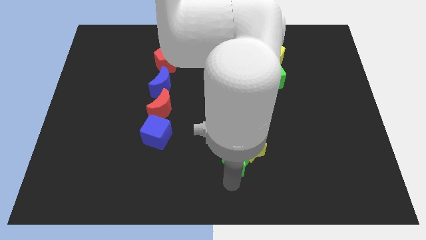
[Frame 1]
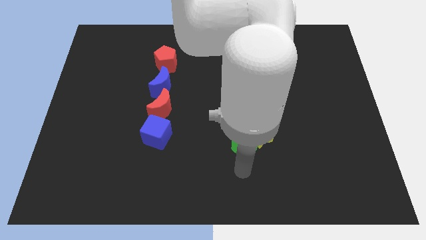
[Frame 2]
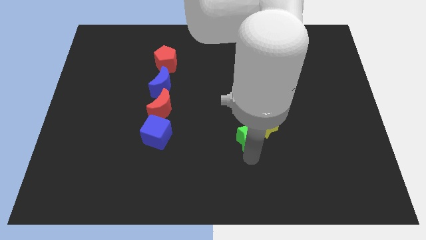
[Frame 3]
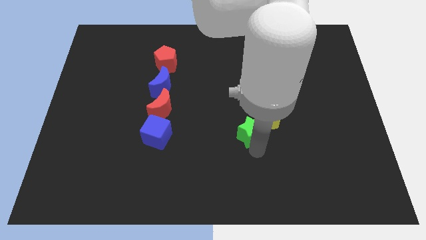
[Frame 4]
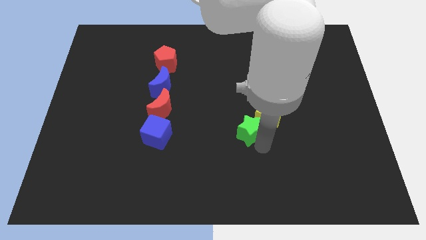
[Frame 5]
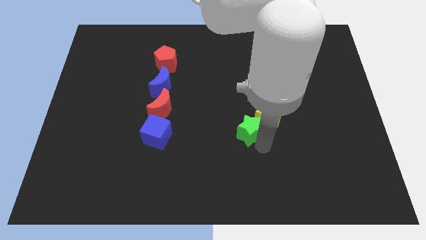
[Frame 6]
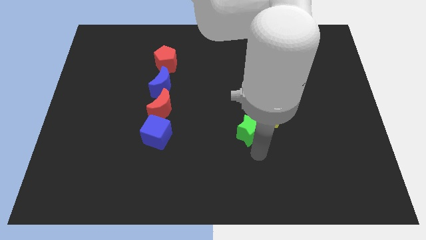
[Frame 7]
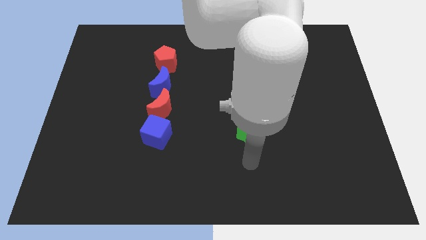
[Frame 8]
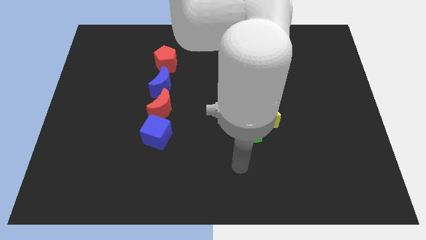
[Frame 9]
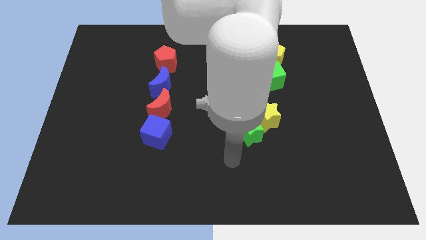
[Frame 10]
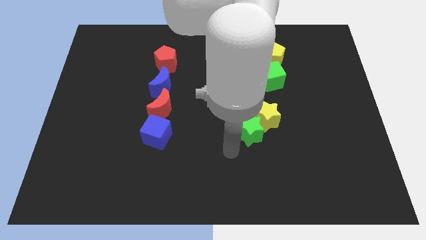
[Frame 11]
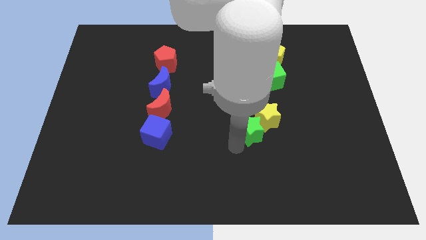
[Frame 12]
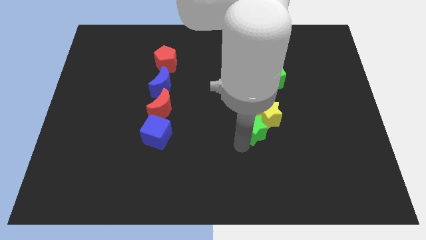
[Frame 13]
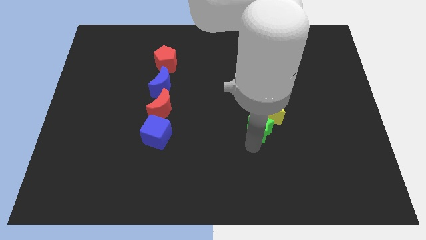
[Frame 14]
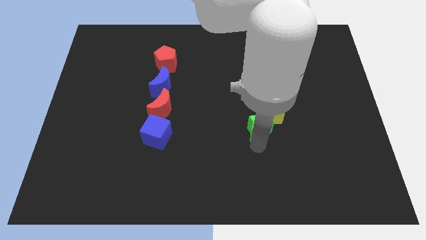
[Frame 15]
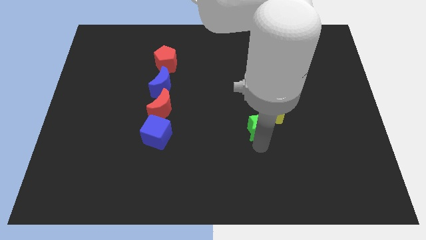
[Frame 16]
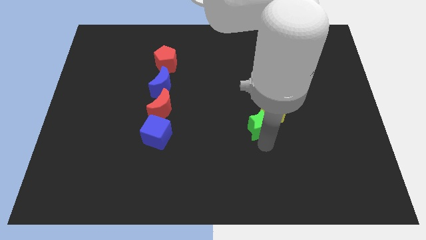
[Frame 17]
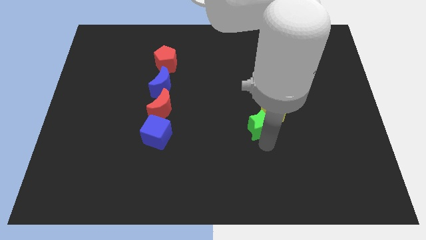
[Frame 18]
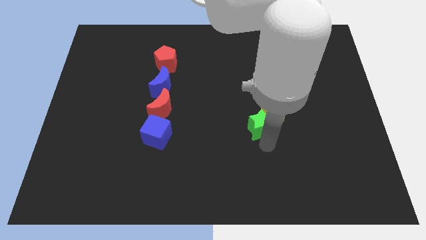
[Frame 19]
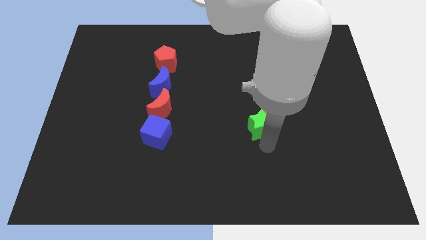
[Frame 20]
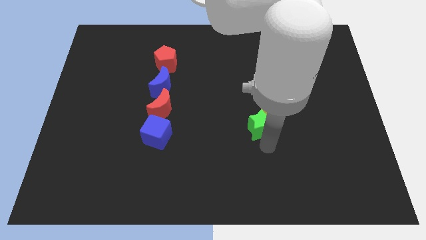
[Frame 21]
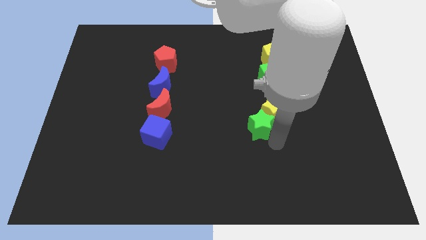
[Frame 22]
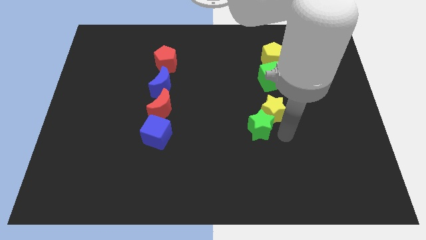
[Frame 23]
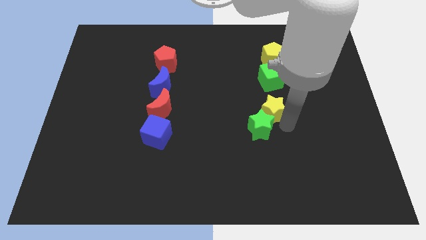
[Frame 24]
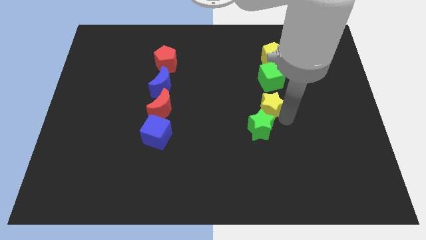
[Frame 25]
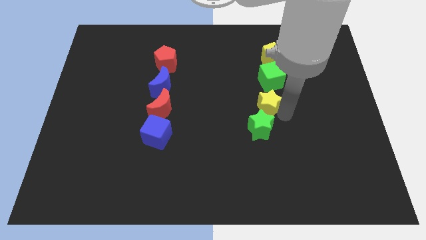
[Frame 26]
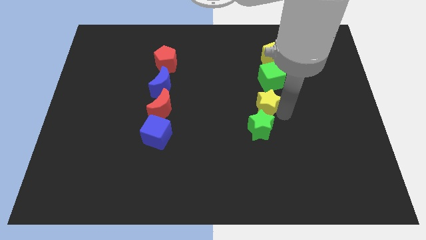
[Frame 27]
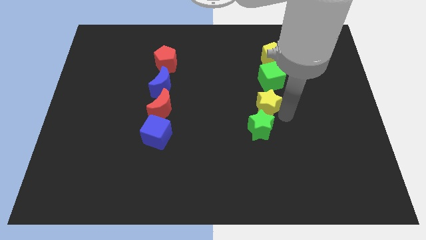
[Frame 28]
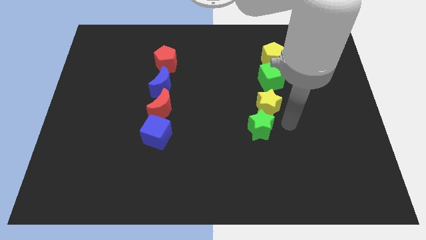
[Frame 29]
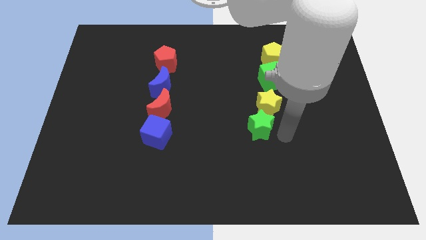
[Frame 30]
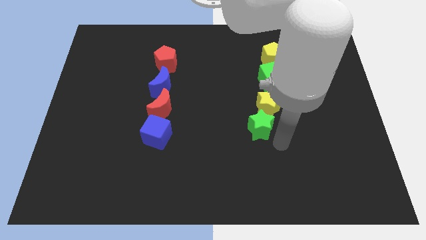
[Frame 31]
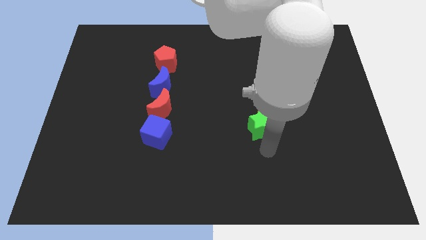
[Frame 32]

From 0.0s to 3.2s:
slide the yellow star and green star towards top

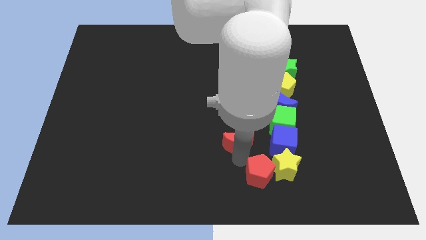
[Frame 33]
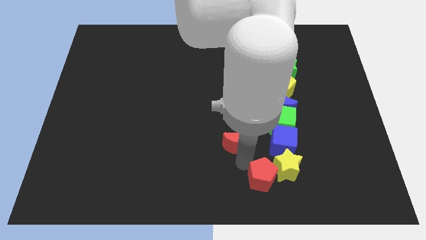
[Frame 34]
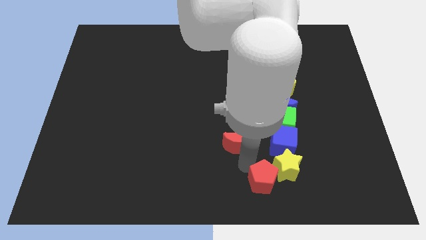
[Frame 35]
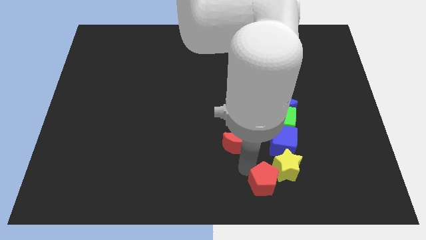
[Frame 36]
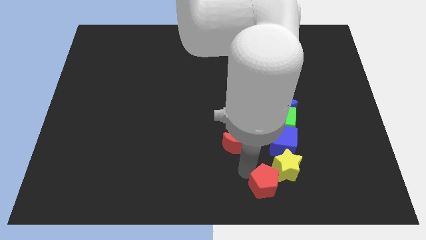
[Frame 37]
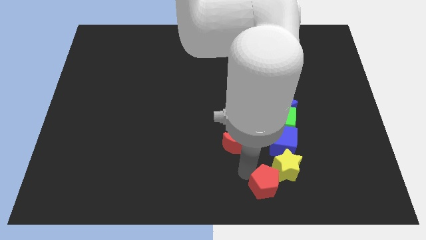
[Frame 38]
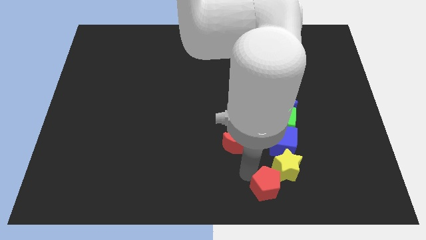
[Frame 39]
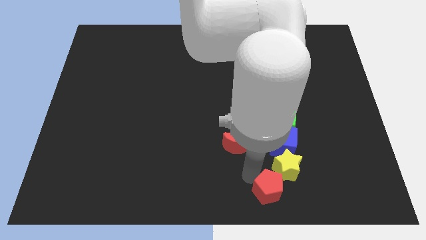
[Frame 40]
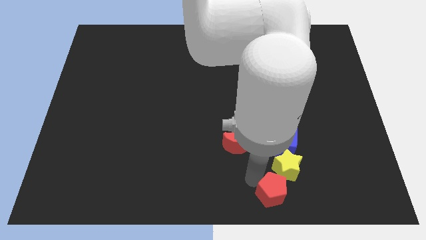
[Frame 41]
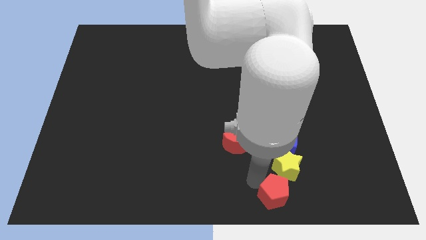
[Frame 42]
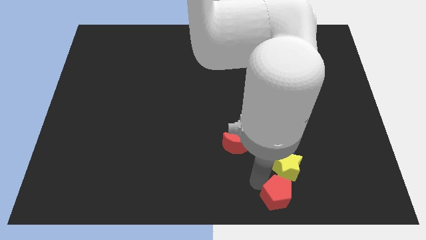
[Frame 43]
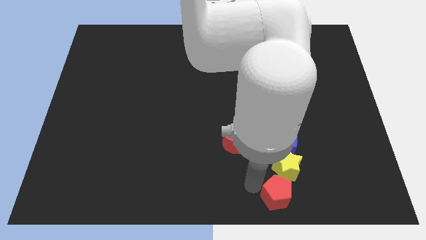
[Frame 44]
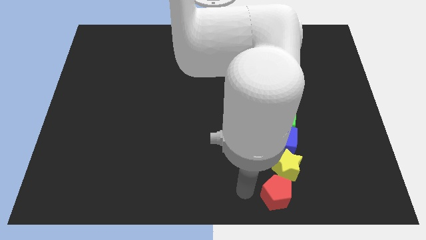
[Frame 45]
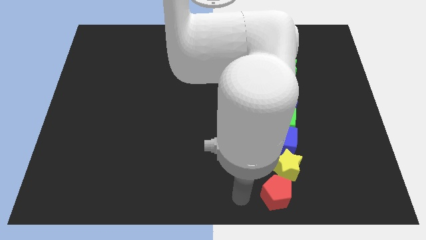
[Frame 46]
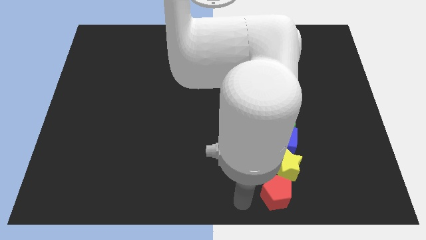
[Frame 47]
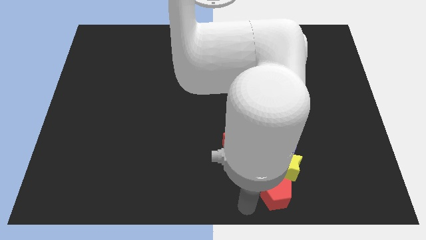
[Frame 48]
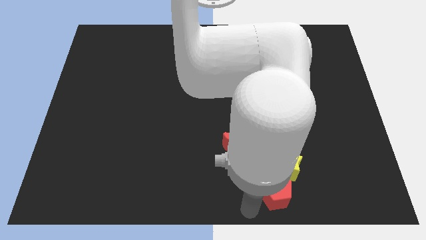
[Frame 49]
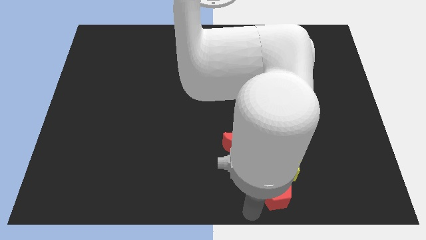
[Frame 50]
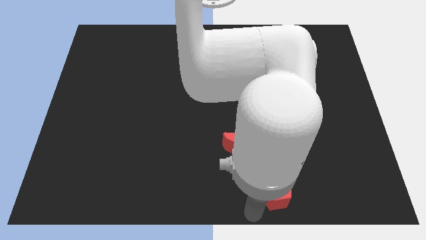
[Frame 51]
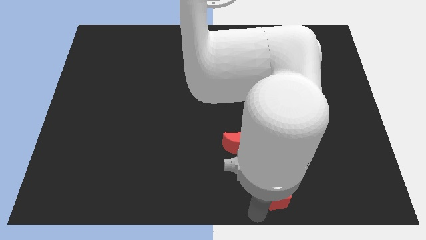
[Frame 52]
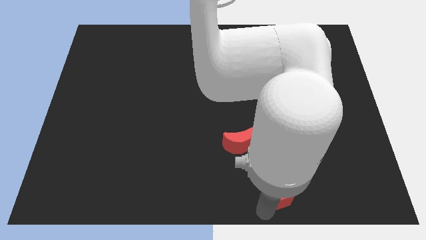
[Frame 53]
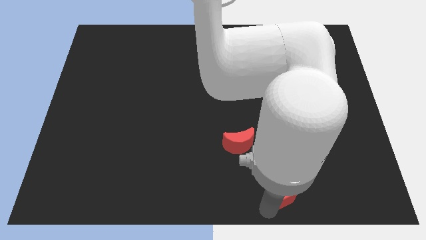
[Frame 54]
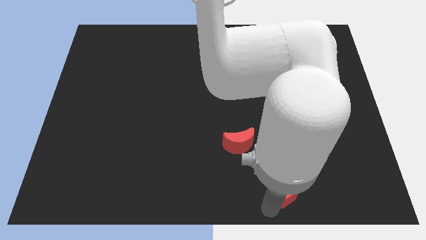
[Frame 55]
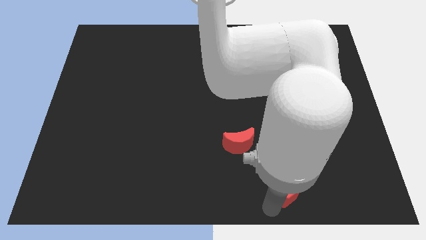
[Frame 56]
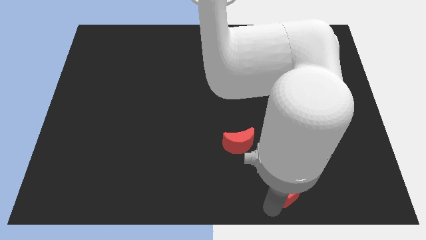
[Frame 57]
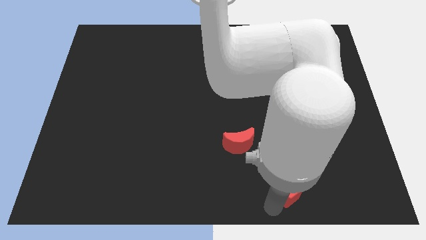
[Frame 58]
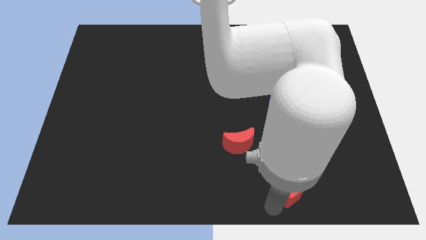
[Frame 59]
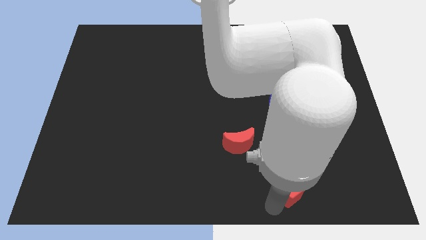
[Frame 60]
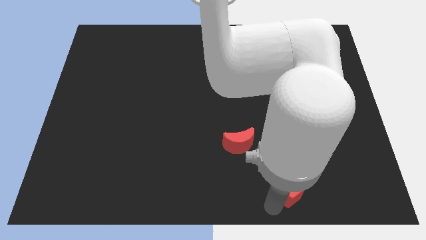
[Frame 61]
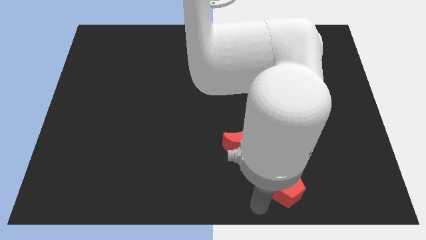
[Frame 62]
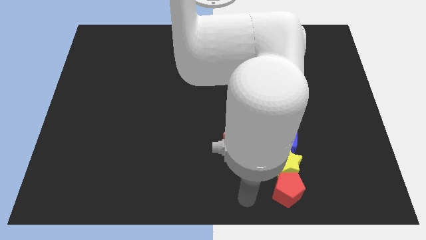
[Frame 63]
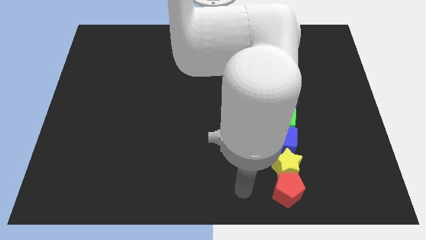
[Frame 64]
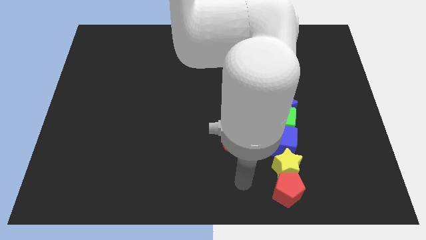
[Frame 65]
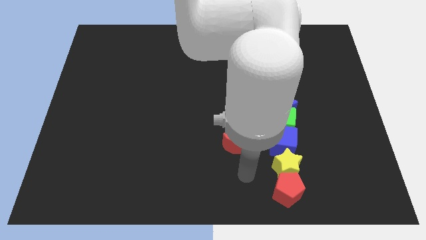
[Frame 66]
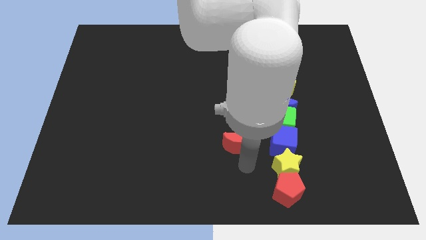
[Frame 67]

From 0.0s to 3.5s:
place the red pentagon below the yellow star

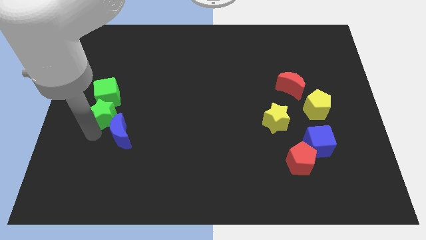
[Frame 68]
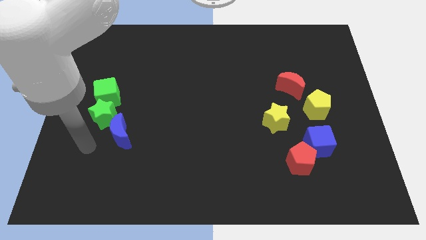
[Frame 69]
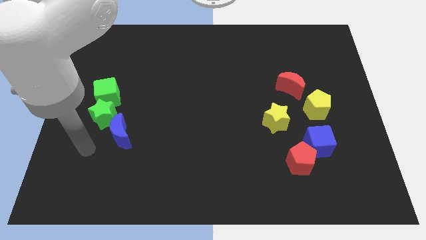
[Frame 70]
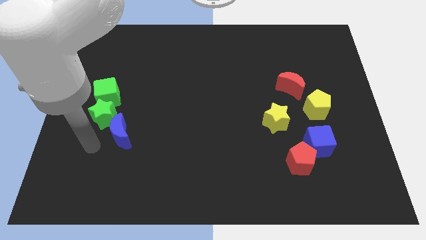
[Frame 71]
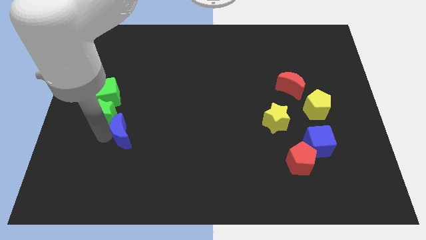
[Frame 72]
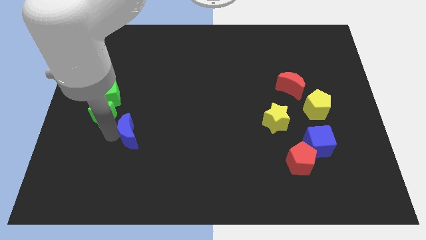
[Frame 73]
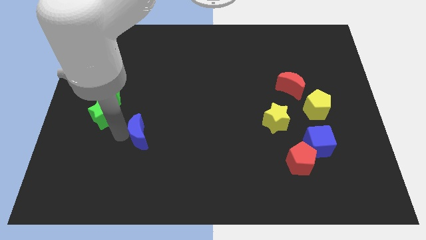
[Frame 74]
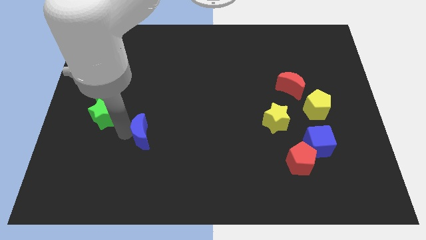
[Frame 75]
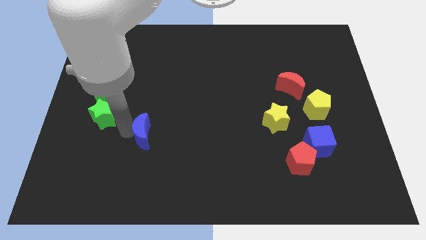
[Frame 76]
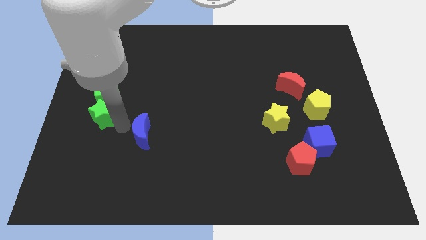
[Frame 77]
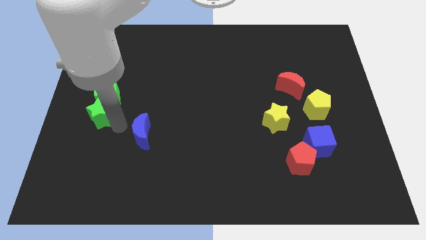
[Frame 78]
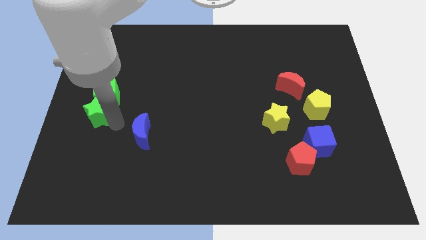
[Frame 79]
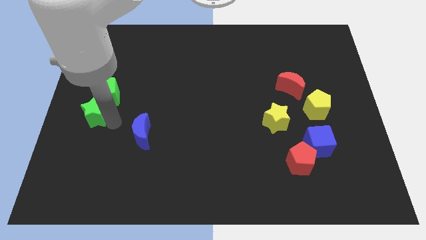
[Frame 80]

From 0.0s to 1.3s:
slight push the blue crescent to the right side of your arm

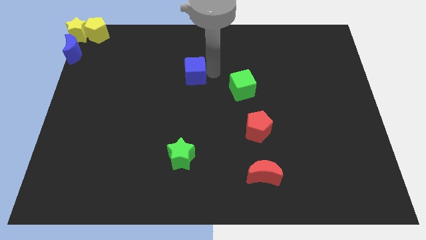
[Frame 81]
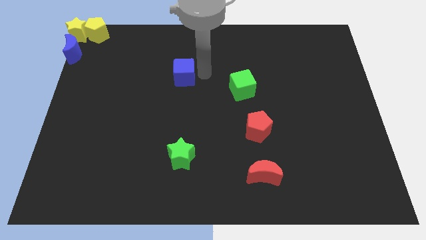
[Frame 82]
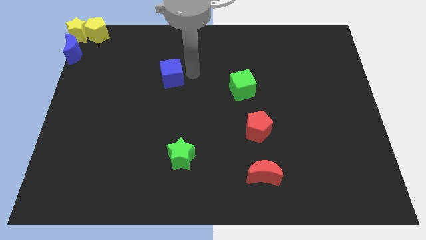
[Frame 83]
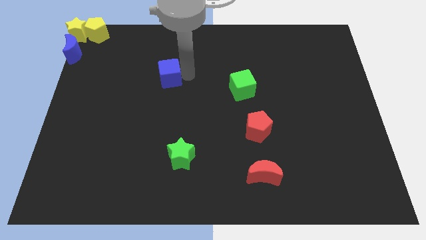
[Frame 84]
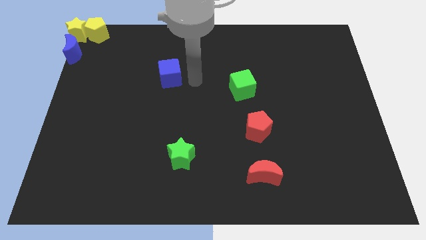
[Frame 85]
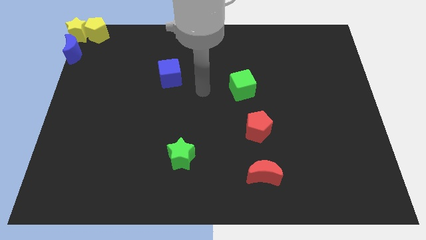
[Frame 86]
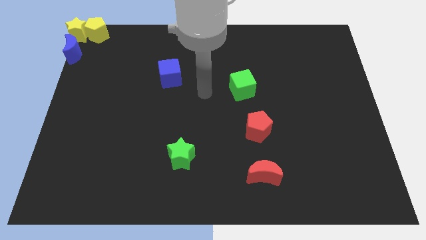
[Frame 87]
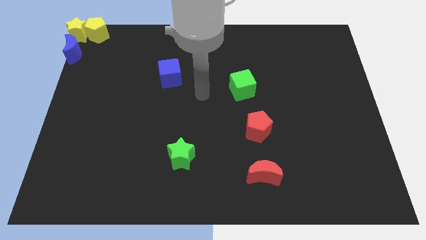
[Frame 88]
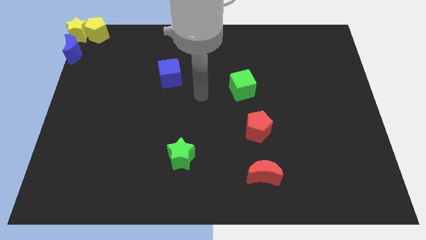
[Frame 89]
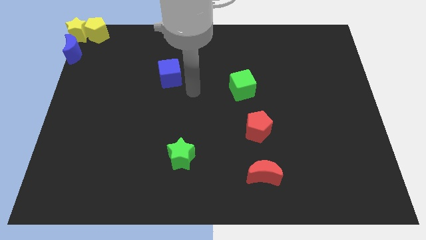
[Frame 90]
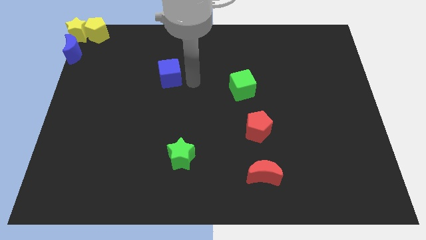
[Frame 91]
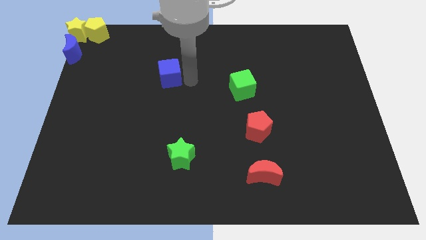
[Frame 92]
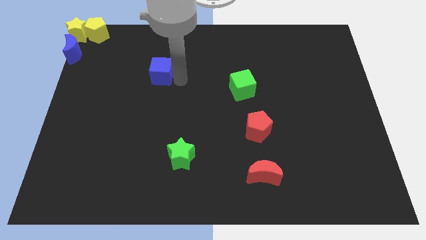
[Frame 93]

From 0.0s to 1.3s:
move blue cube to left side
